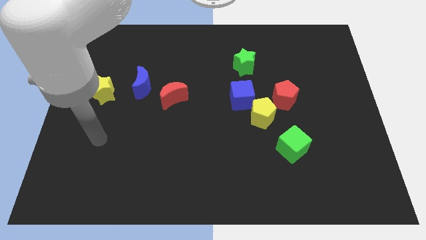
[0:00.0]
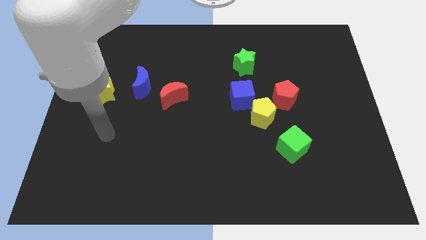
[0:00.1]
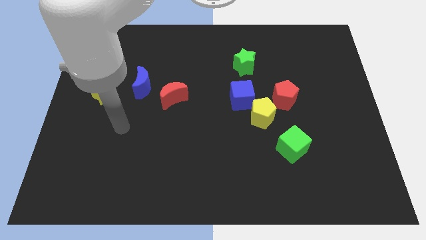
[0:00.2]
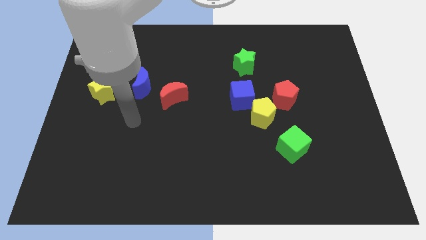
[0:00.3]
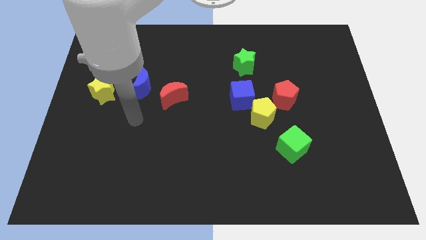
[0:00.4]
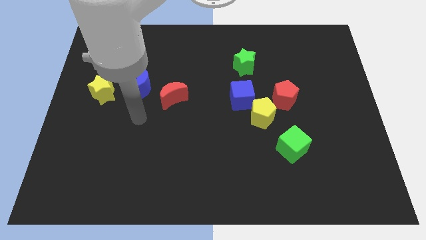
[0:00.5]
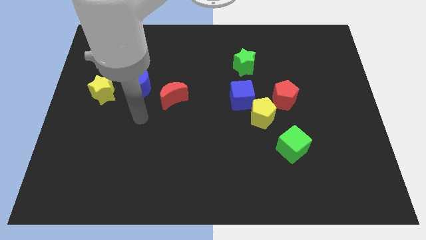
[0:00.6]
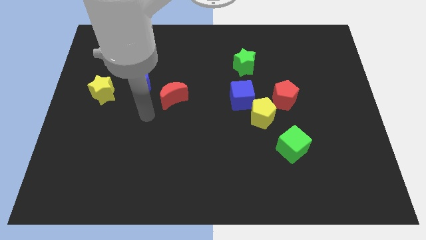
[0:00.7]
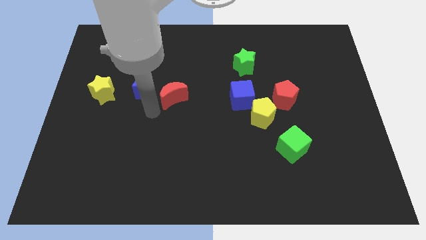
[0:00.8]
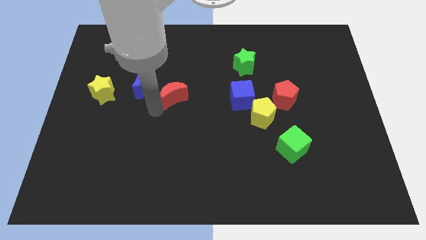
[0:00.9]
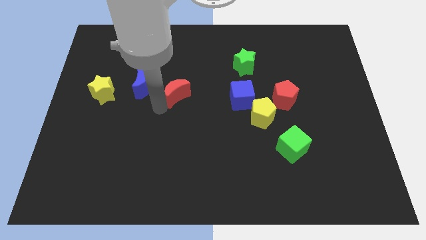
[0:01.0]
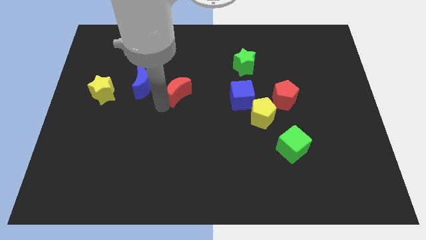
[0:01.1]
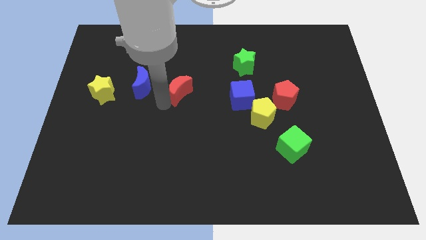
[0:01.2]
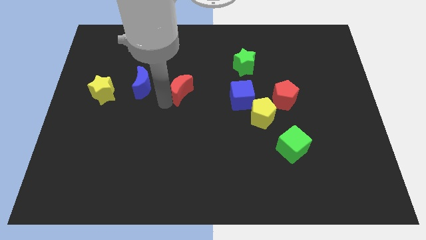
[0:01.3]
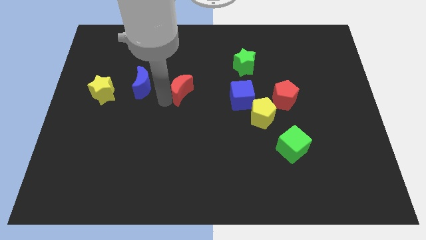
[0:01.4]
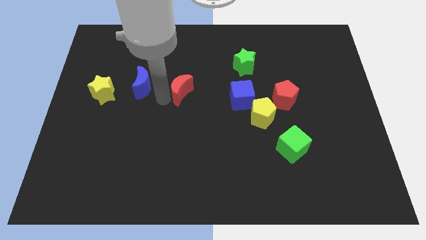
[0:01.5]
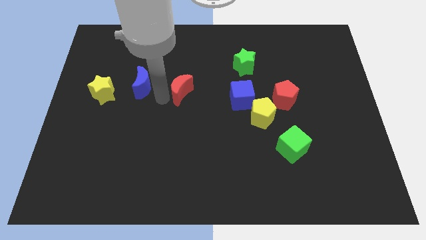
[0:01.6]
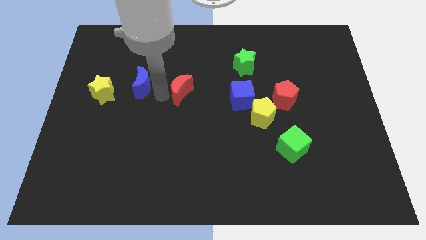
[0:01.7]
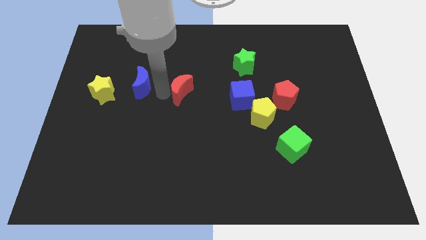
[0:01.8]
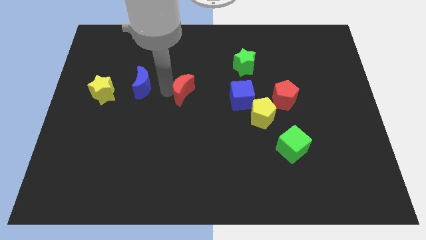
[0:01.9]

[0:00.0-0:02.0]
move the red crescent close to the blue cube

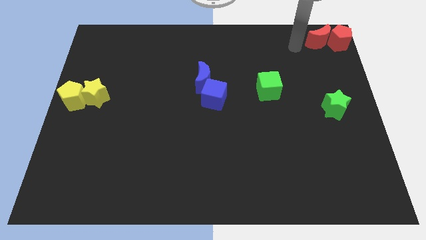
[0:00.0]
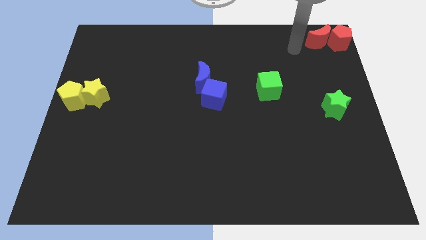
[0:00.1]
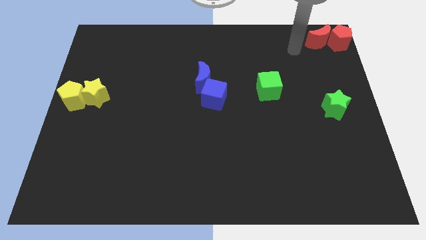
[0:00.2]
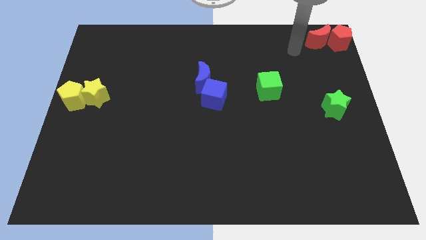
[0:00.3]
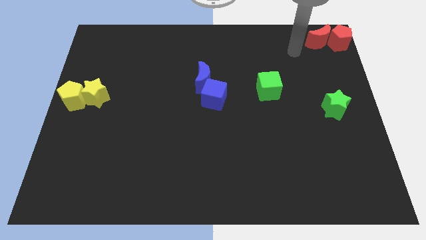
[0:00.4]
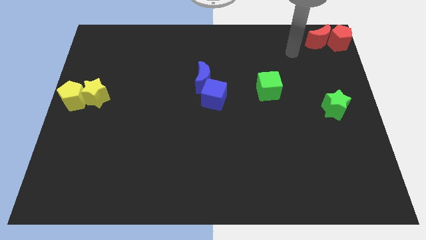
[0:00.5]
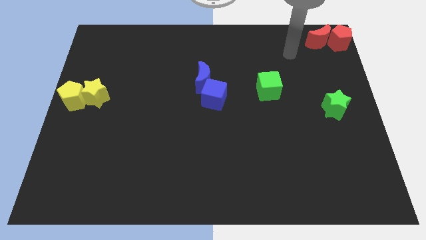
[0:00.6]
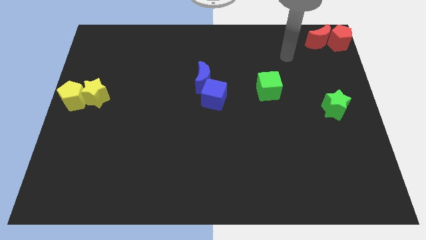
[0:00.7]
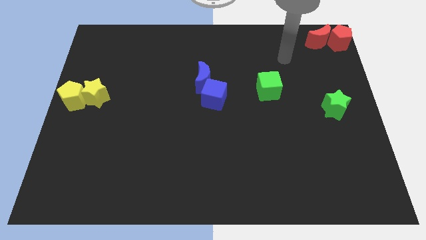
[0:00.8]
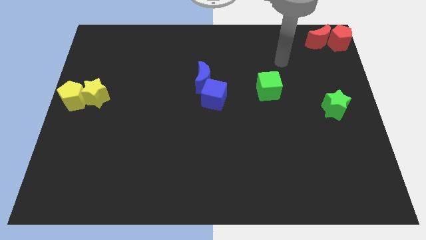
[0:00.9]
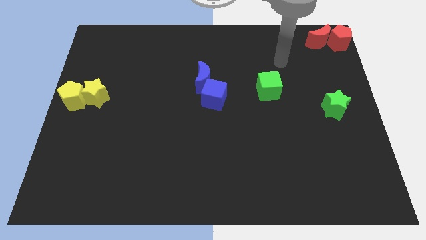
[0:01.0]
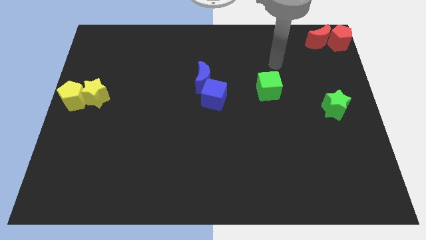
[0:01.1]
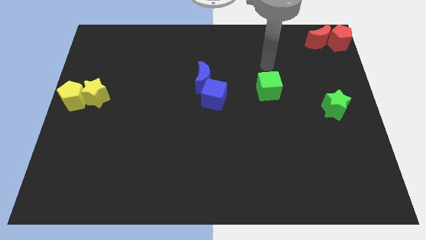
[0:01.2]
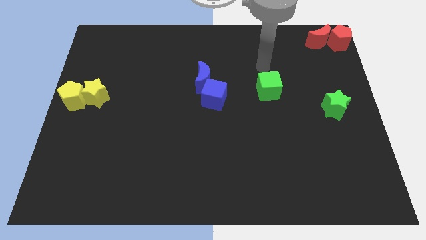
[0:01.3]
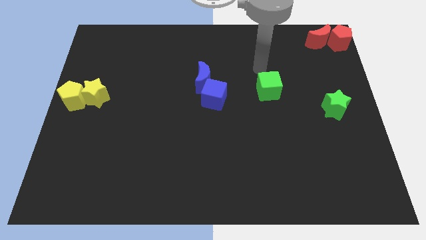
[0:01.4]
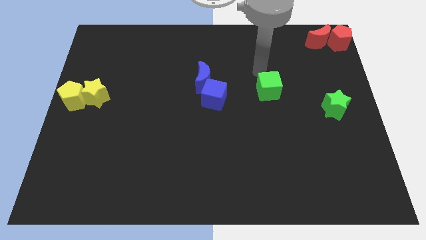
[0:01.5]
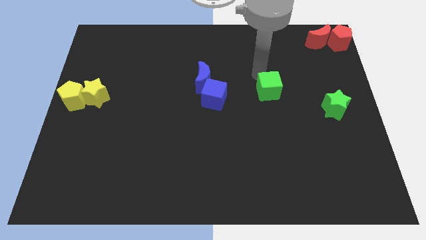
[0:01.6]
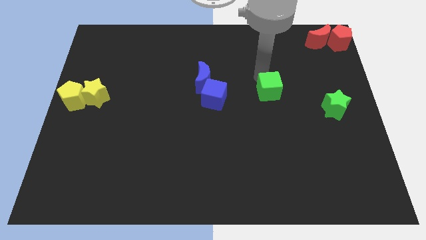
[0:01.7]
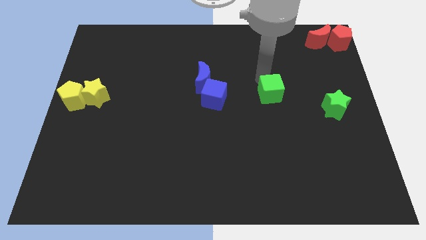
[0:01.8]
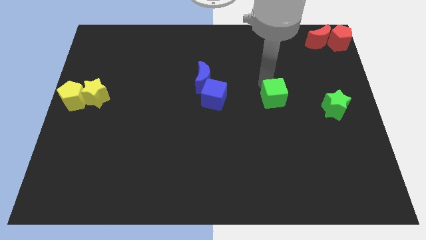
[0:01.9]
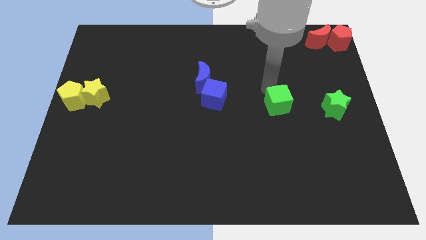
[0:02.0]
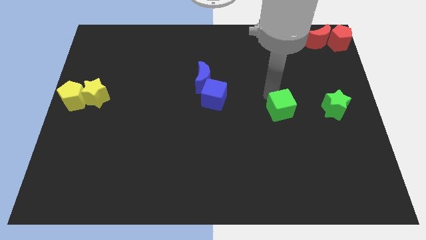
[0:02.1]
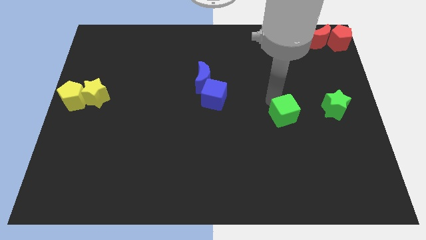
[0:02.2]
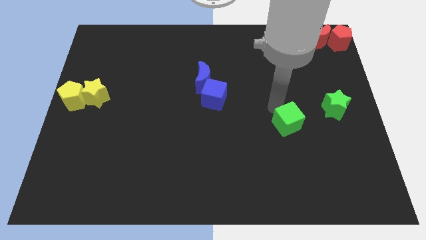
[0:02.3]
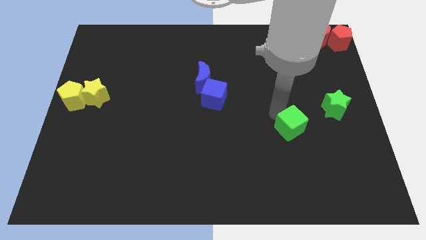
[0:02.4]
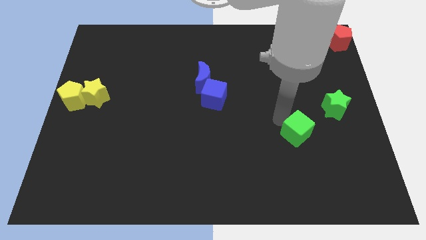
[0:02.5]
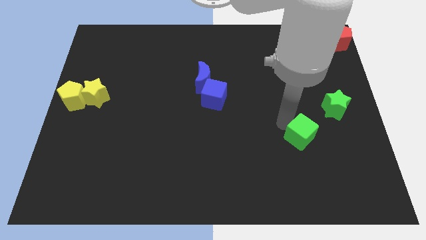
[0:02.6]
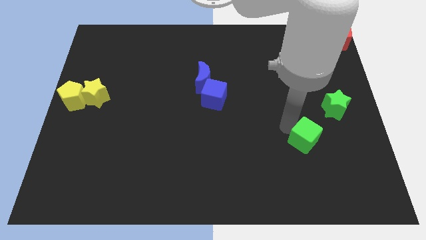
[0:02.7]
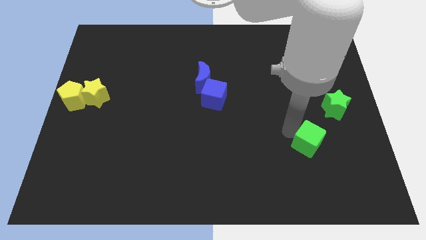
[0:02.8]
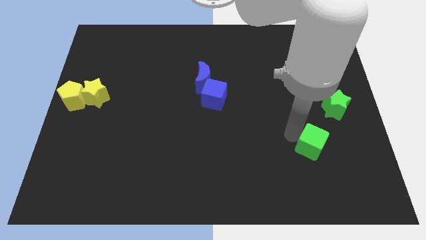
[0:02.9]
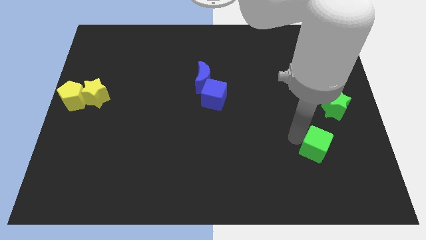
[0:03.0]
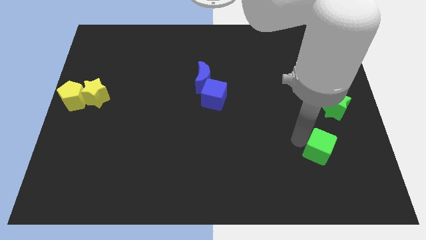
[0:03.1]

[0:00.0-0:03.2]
slide the green cube diagonally on the bottom left side of the green star

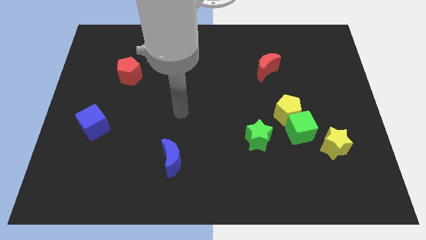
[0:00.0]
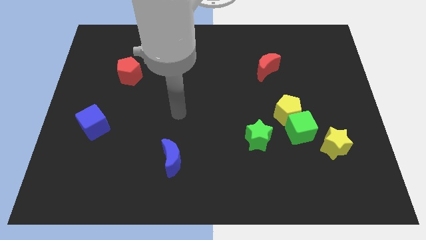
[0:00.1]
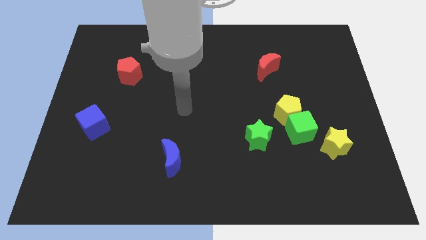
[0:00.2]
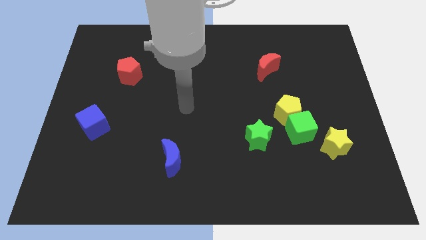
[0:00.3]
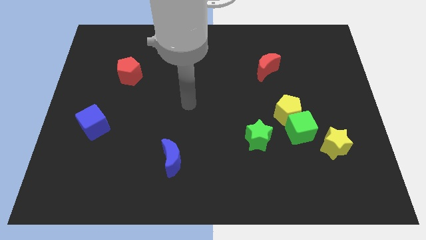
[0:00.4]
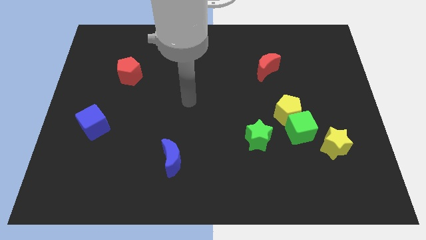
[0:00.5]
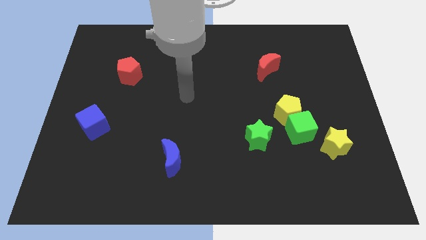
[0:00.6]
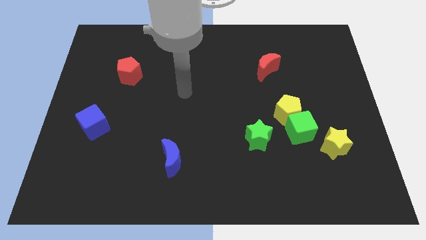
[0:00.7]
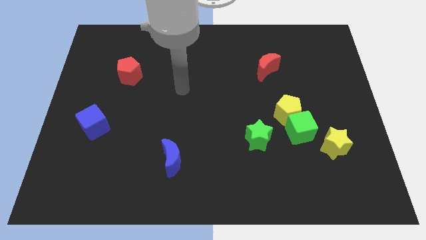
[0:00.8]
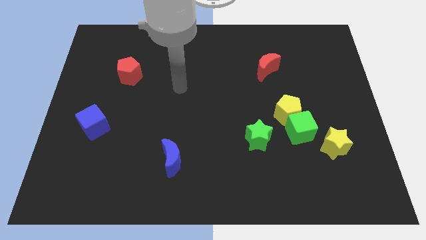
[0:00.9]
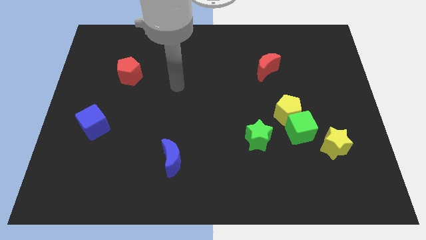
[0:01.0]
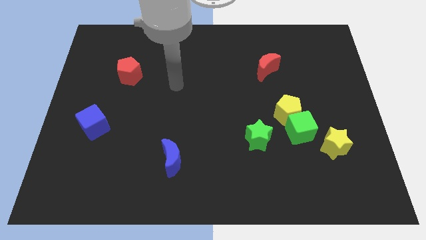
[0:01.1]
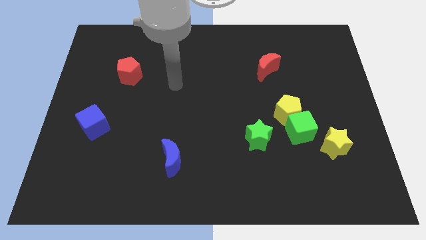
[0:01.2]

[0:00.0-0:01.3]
move your hand slightly up

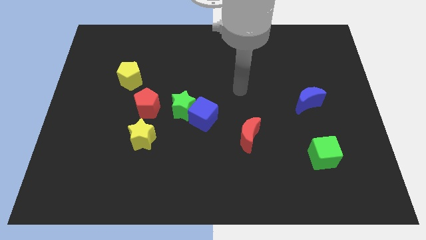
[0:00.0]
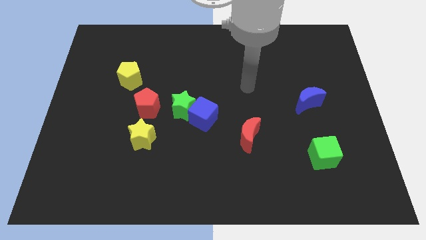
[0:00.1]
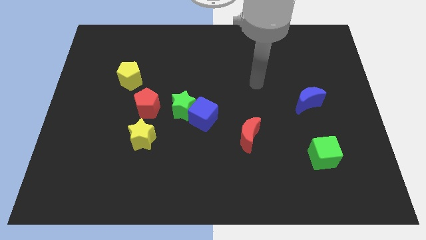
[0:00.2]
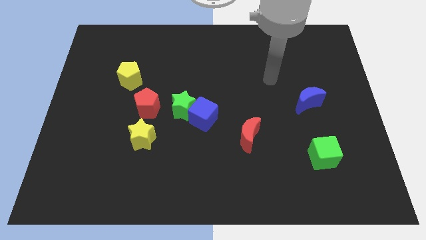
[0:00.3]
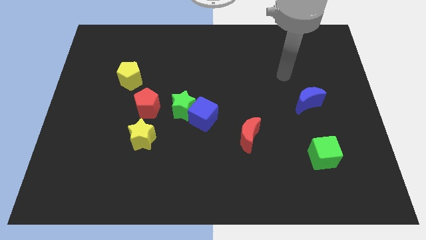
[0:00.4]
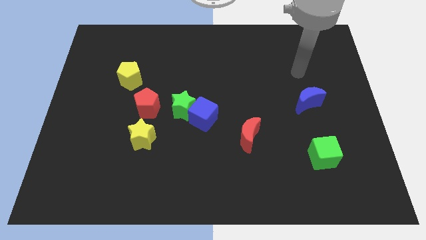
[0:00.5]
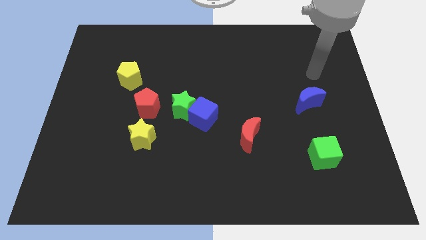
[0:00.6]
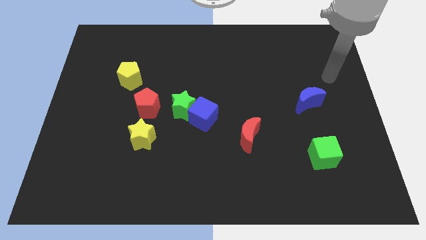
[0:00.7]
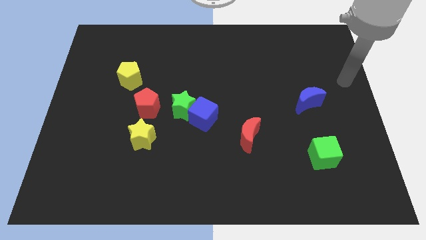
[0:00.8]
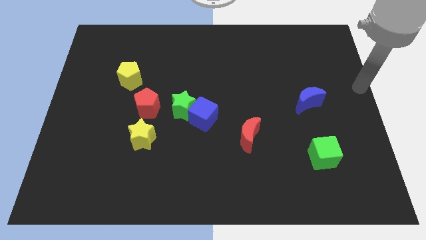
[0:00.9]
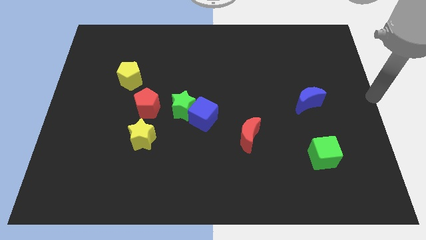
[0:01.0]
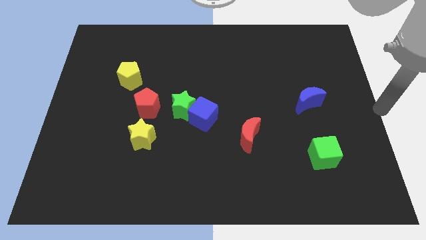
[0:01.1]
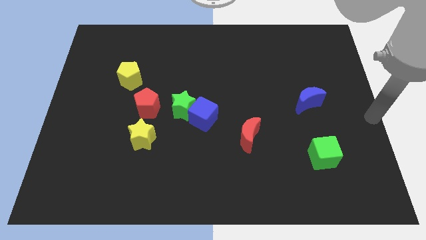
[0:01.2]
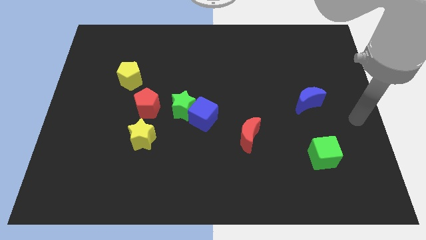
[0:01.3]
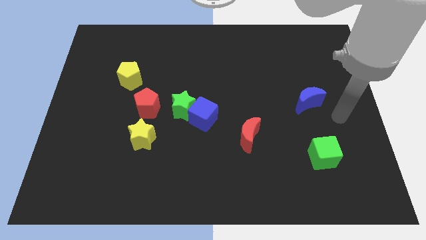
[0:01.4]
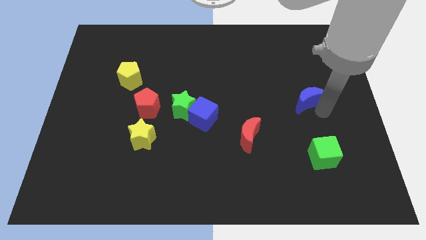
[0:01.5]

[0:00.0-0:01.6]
move arm towards the blue crescent

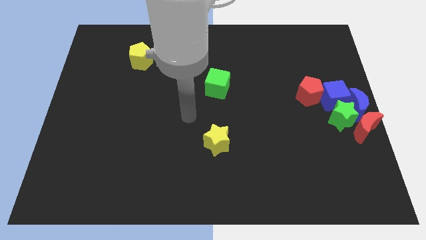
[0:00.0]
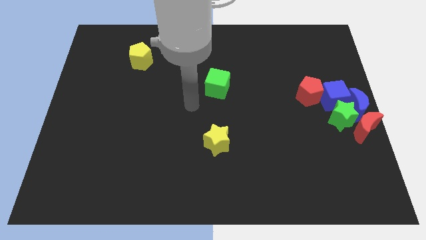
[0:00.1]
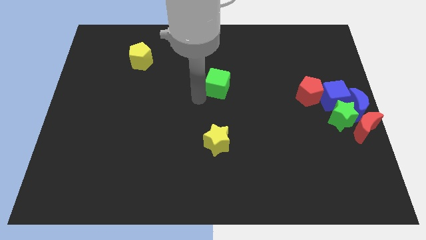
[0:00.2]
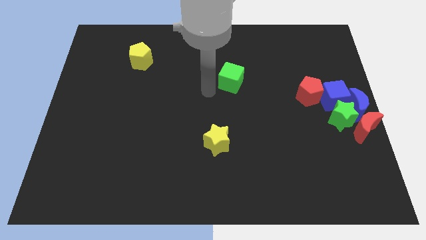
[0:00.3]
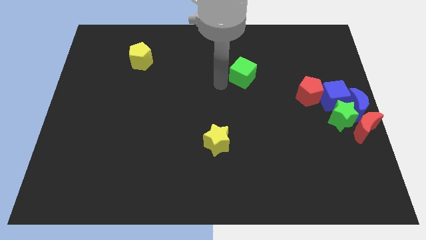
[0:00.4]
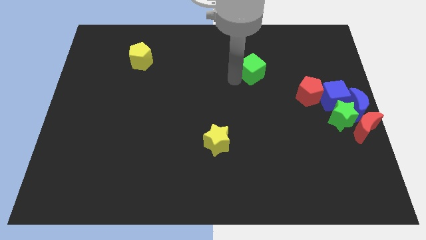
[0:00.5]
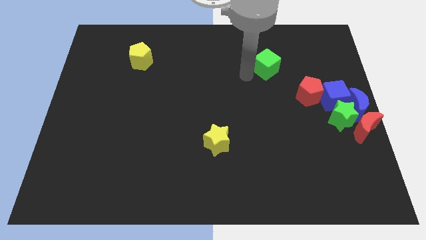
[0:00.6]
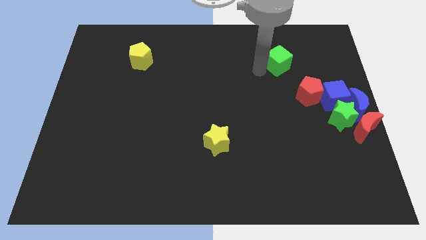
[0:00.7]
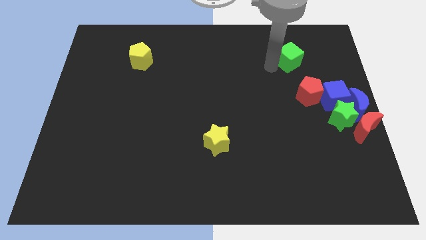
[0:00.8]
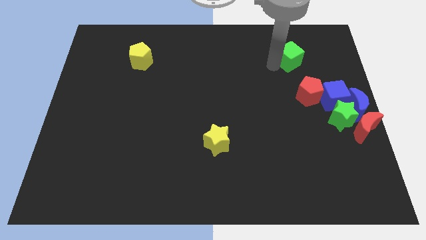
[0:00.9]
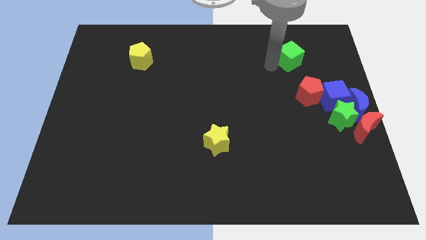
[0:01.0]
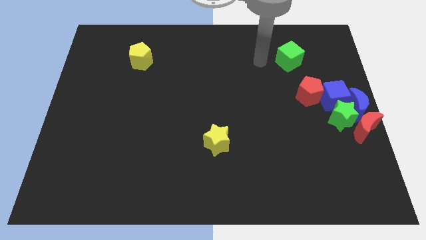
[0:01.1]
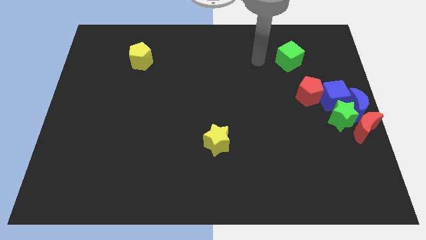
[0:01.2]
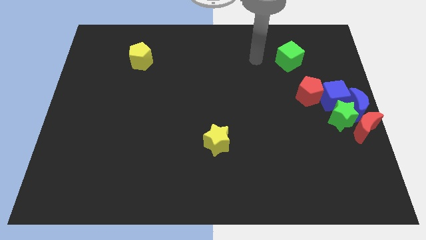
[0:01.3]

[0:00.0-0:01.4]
place the green cube diagonally to the top left of the red pentagon
